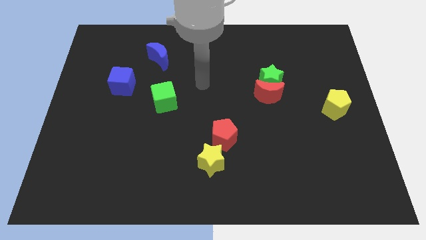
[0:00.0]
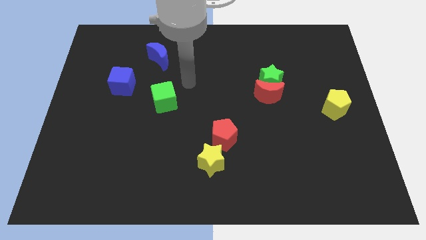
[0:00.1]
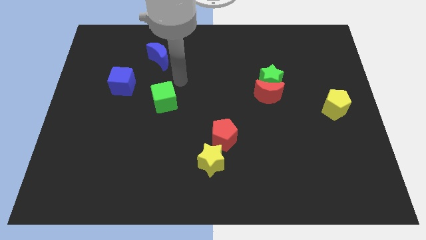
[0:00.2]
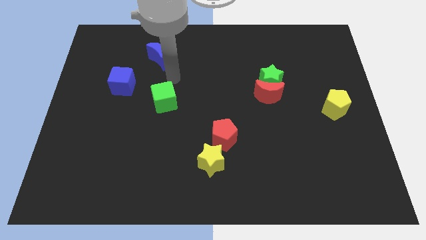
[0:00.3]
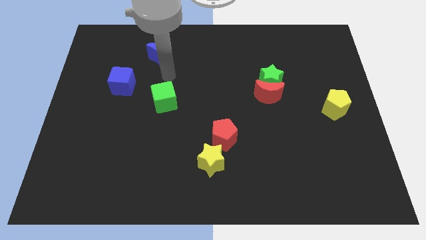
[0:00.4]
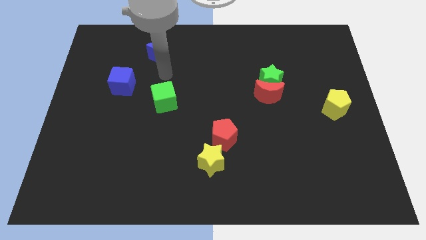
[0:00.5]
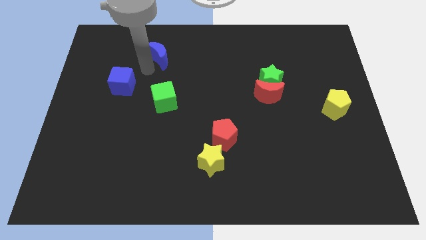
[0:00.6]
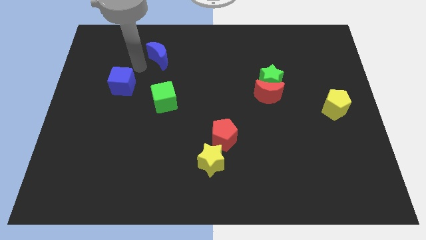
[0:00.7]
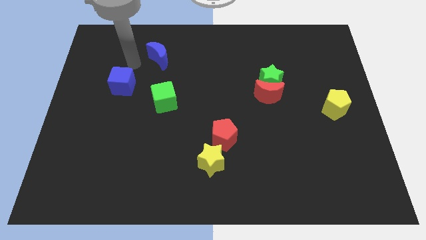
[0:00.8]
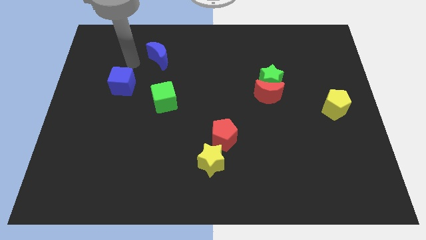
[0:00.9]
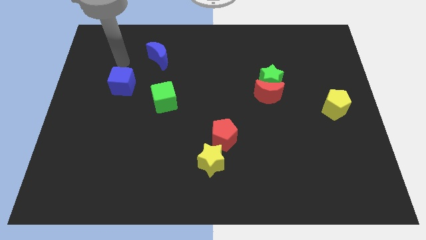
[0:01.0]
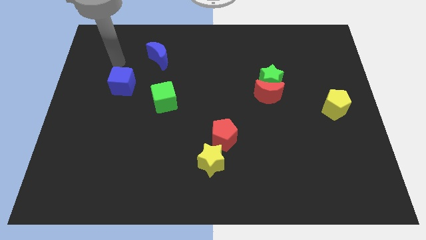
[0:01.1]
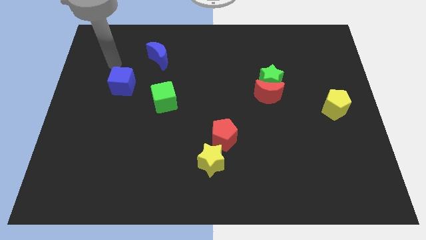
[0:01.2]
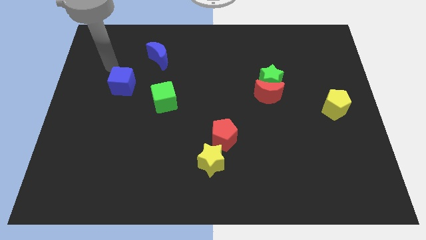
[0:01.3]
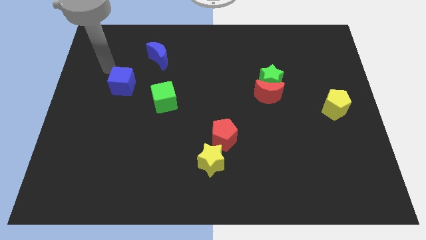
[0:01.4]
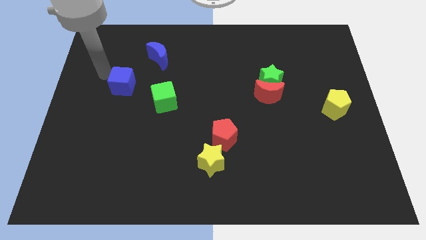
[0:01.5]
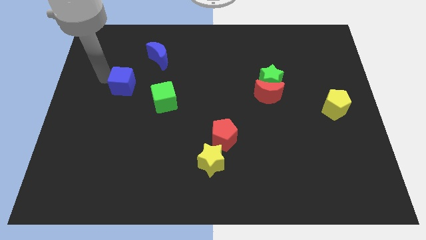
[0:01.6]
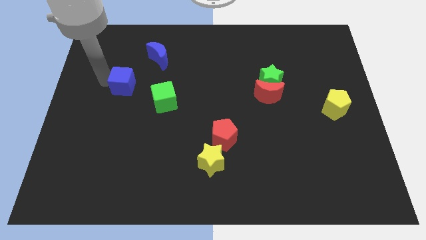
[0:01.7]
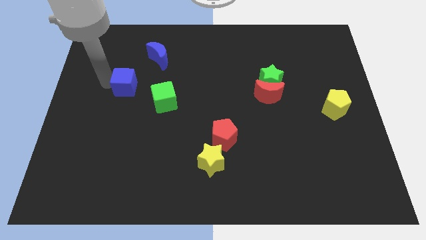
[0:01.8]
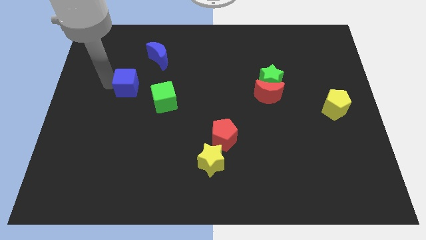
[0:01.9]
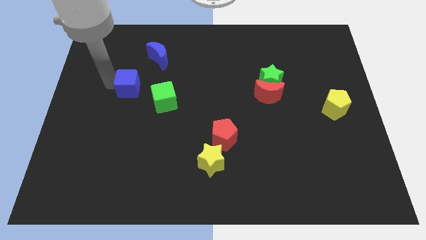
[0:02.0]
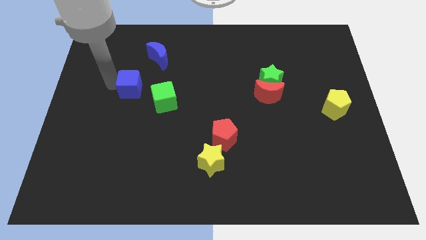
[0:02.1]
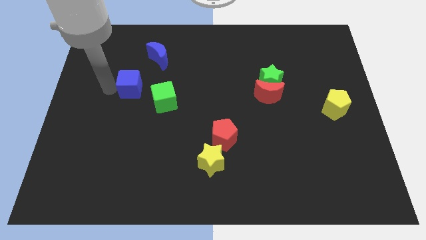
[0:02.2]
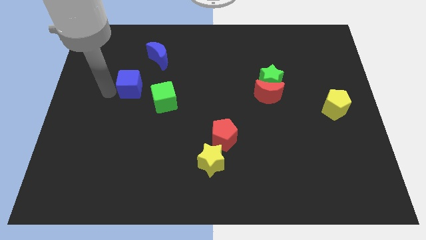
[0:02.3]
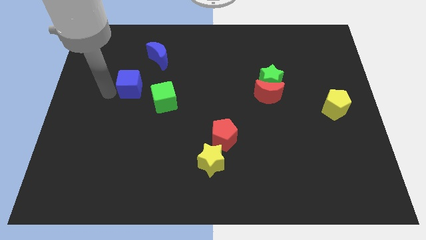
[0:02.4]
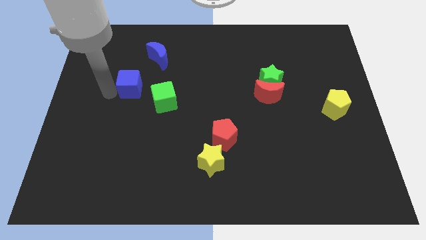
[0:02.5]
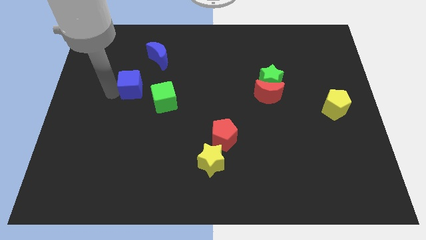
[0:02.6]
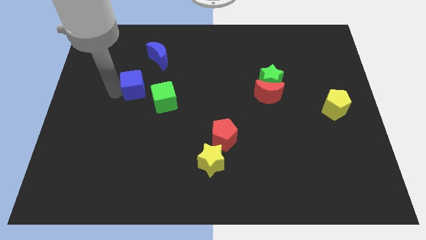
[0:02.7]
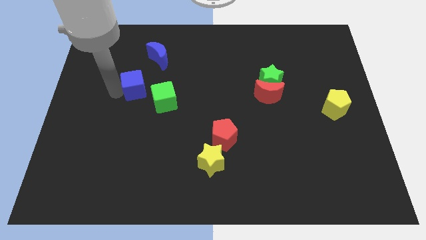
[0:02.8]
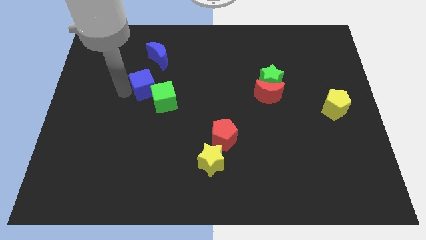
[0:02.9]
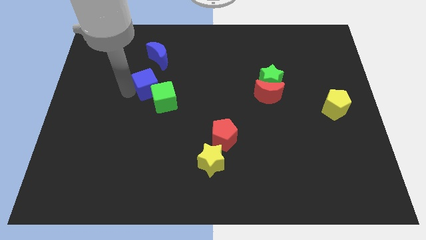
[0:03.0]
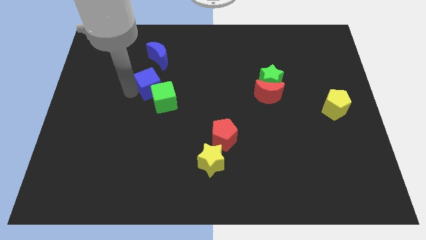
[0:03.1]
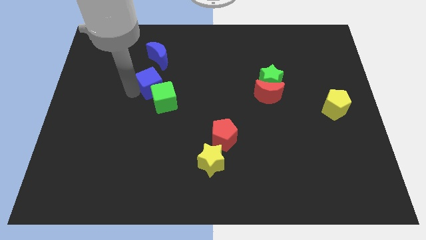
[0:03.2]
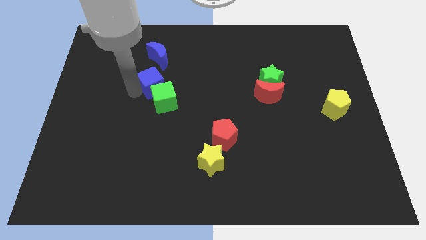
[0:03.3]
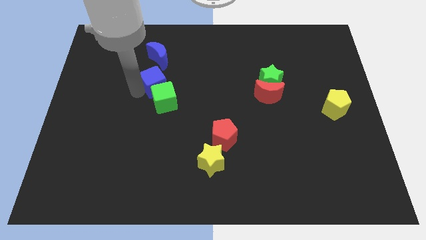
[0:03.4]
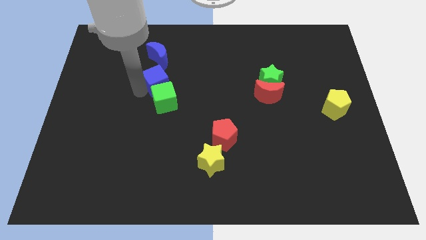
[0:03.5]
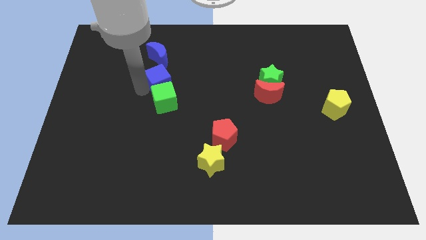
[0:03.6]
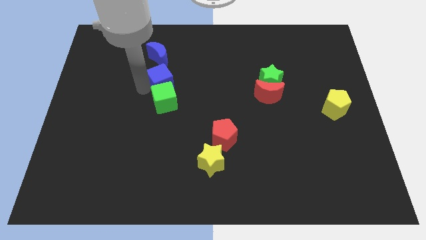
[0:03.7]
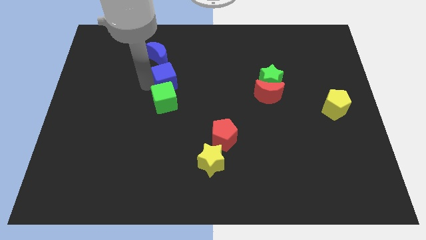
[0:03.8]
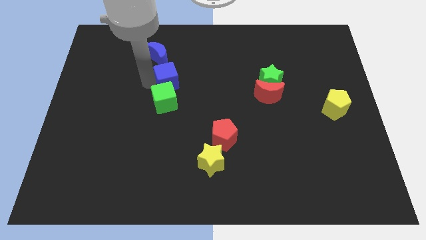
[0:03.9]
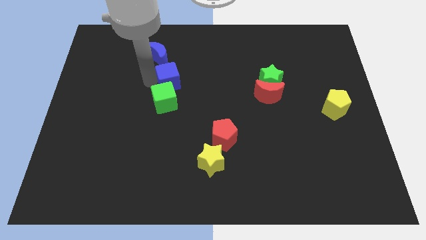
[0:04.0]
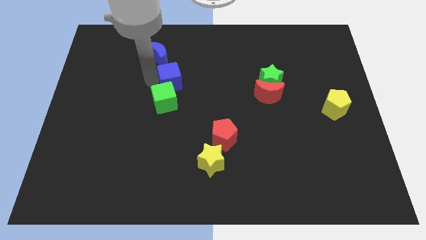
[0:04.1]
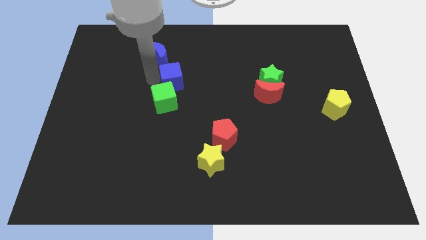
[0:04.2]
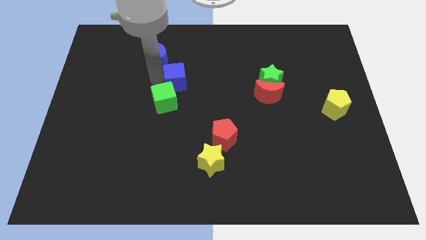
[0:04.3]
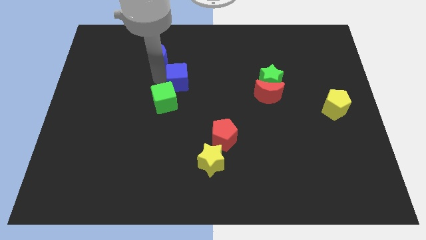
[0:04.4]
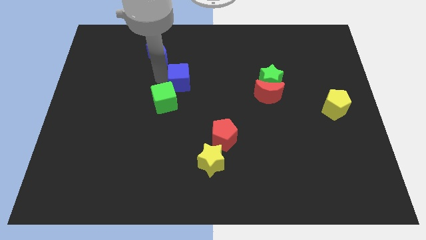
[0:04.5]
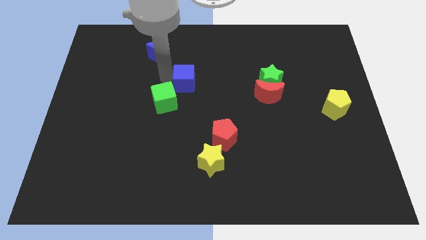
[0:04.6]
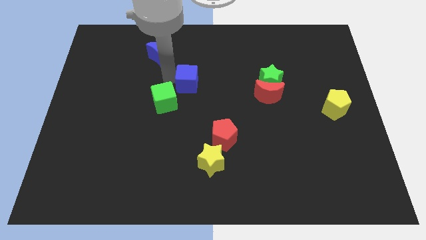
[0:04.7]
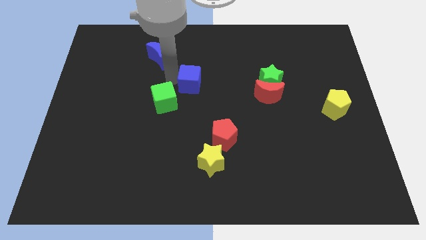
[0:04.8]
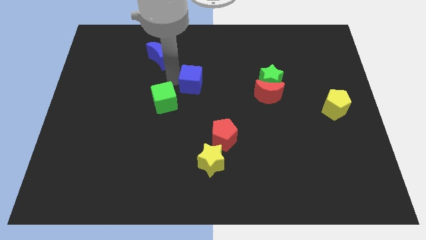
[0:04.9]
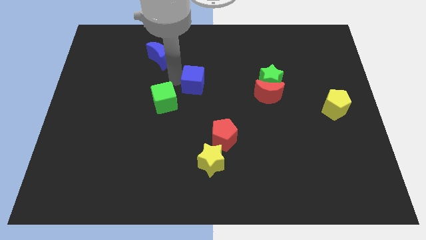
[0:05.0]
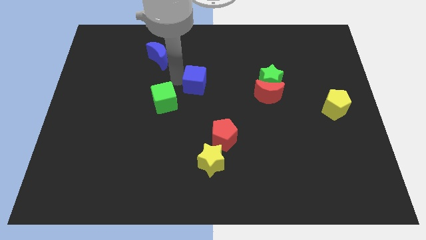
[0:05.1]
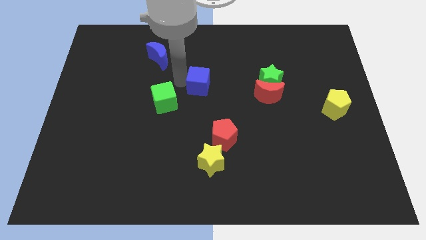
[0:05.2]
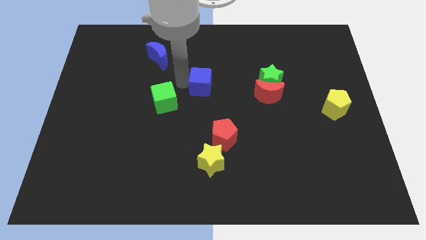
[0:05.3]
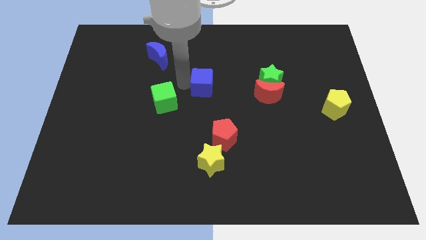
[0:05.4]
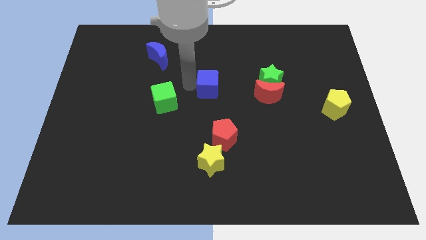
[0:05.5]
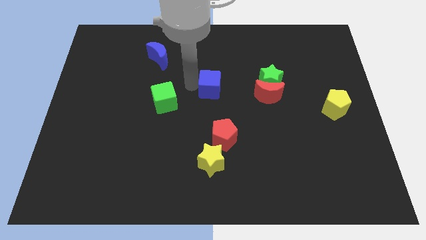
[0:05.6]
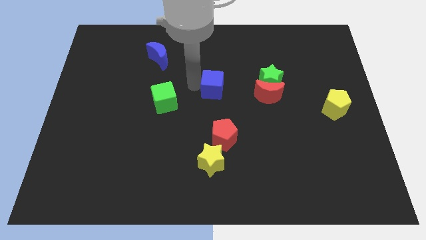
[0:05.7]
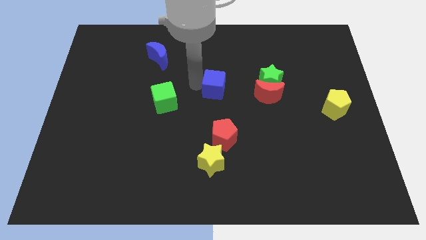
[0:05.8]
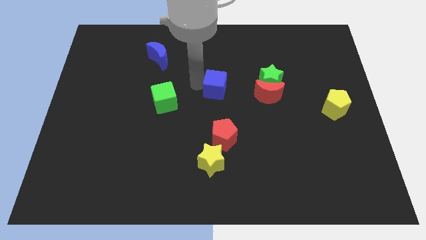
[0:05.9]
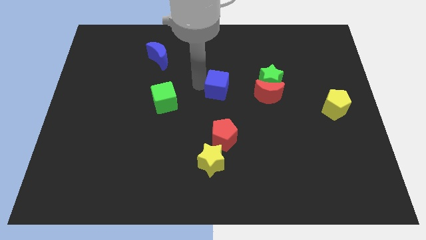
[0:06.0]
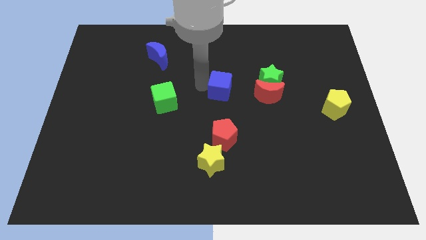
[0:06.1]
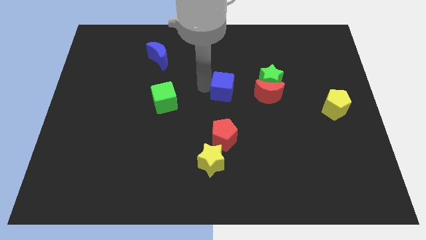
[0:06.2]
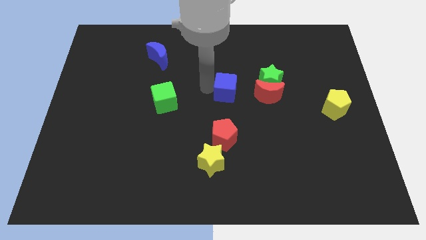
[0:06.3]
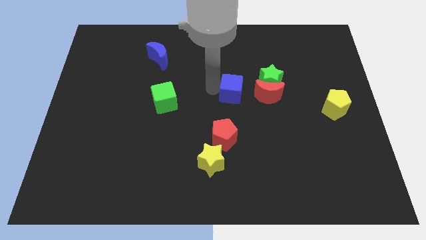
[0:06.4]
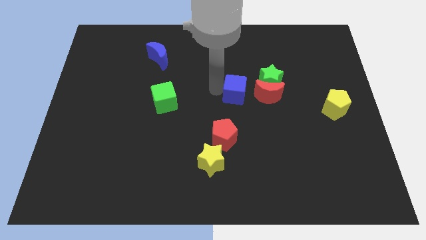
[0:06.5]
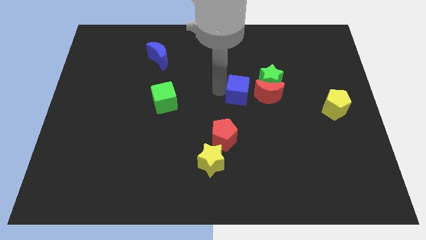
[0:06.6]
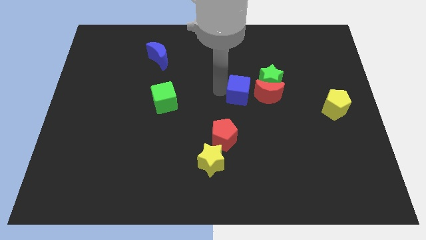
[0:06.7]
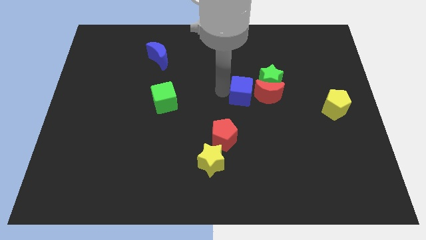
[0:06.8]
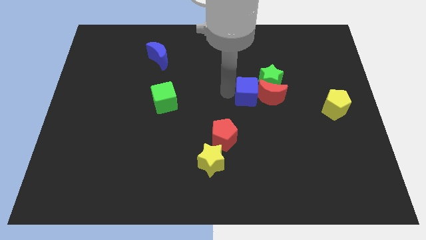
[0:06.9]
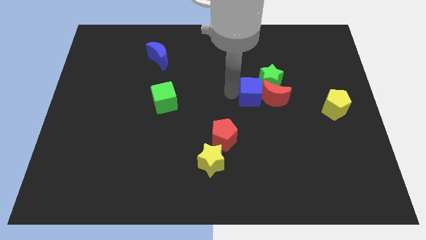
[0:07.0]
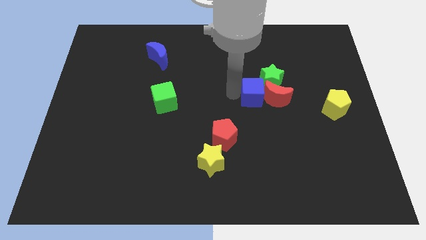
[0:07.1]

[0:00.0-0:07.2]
put the blue cube close to the red moon
